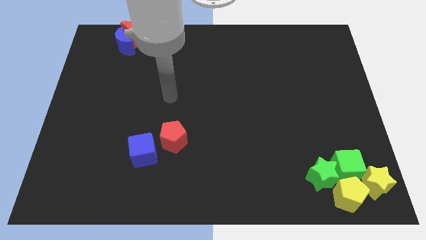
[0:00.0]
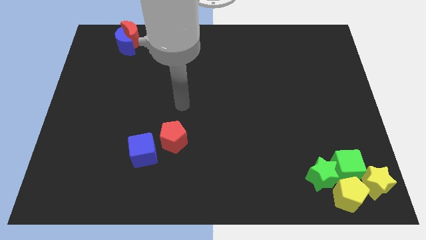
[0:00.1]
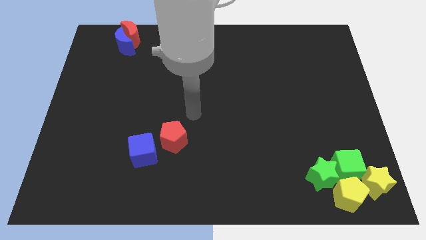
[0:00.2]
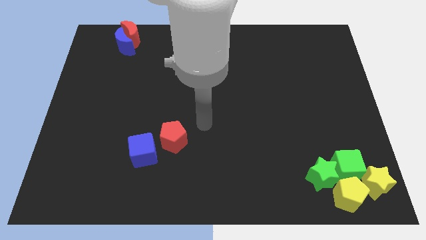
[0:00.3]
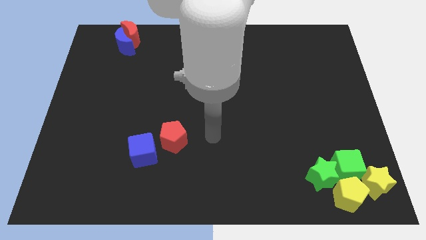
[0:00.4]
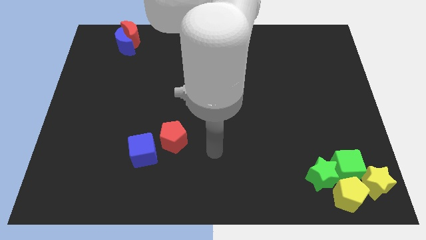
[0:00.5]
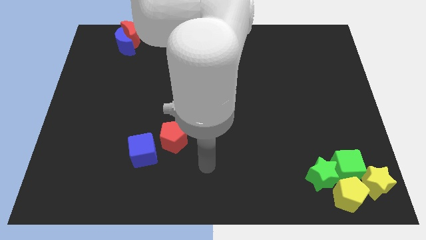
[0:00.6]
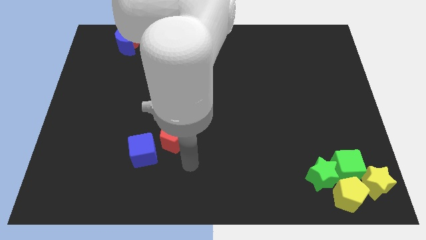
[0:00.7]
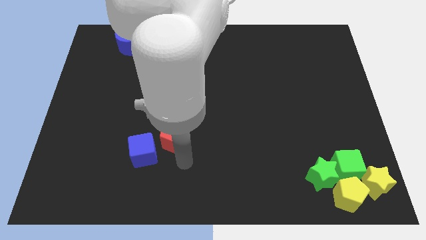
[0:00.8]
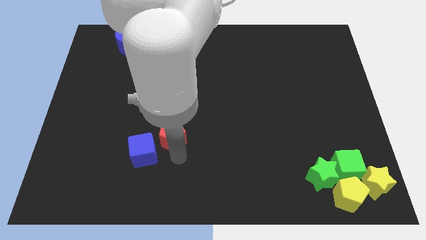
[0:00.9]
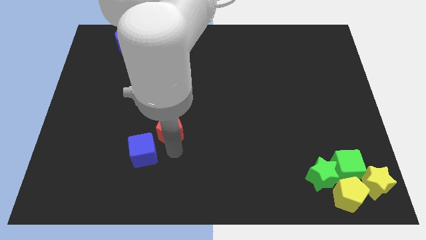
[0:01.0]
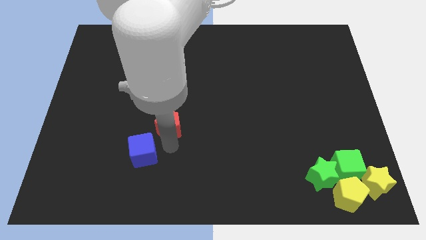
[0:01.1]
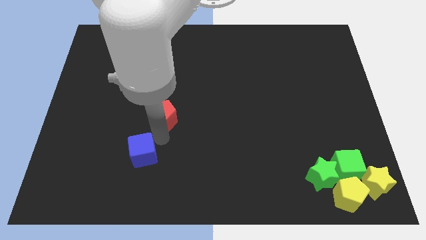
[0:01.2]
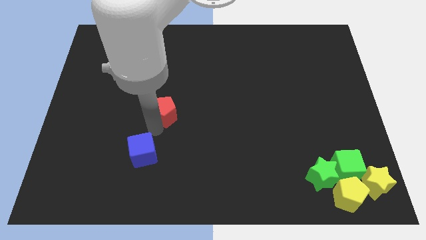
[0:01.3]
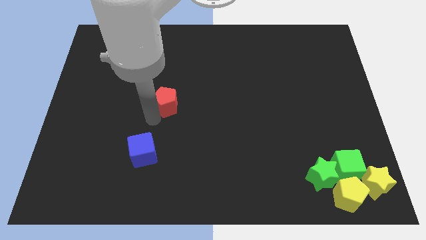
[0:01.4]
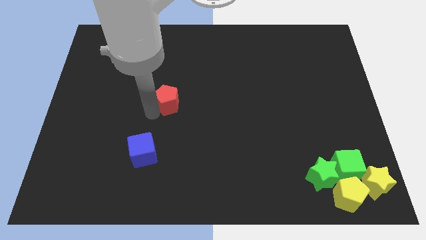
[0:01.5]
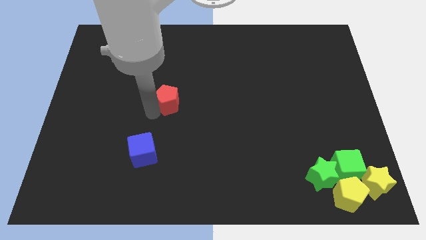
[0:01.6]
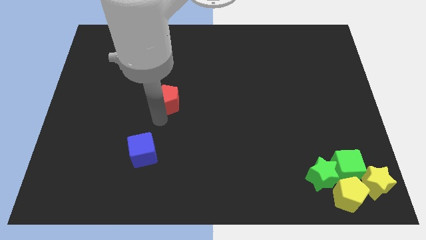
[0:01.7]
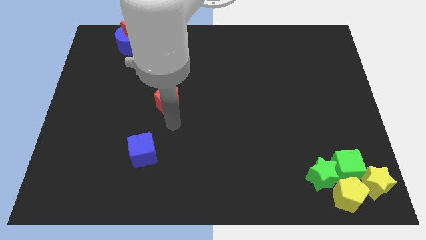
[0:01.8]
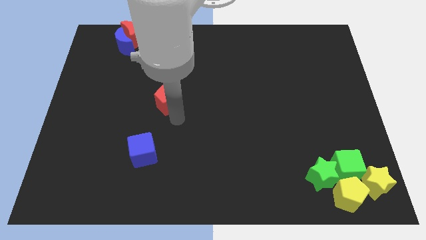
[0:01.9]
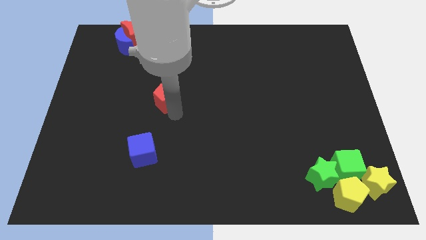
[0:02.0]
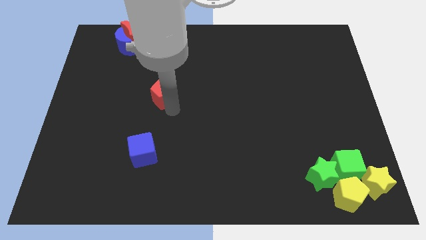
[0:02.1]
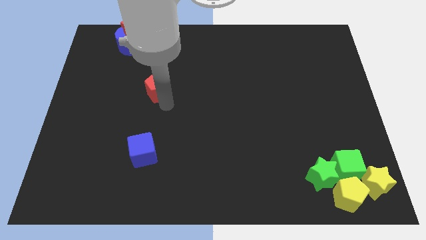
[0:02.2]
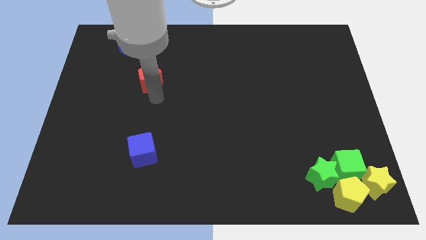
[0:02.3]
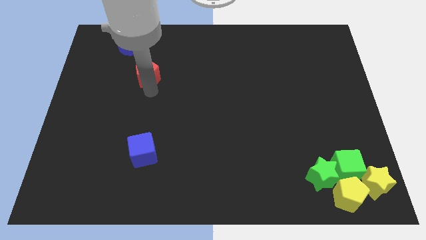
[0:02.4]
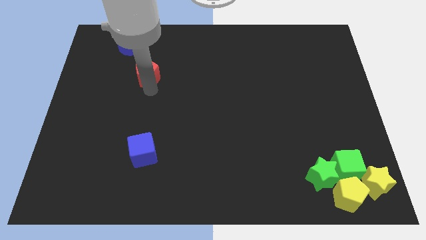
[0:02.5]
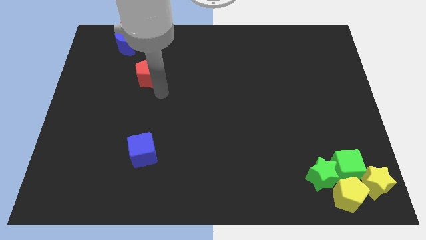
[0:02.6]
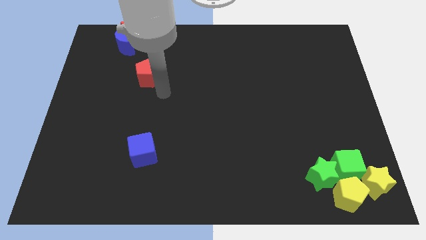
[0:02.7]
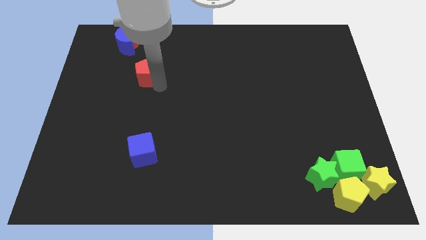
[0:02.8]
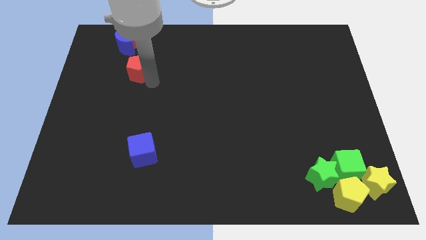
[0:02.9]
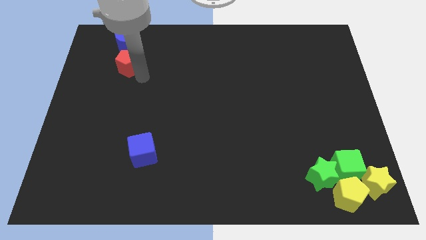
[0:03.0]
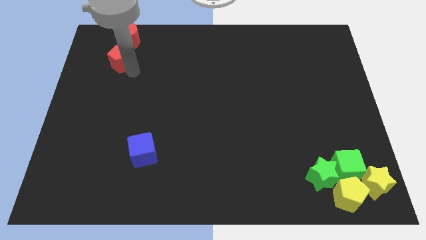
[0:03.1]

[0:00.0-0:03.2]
push red pentagon below blue crescent

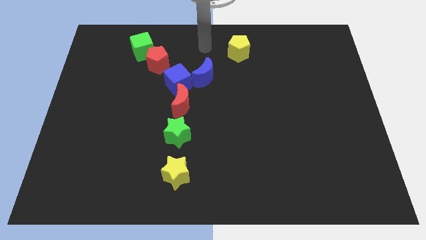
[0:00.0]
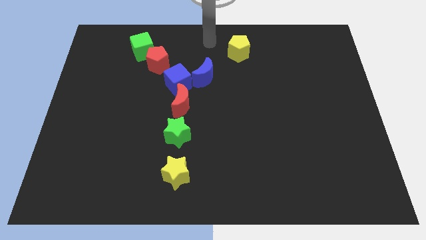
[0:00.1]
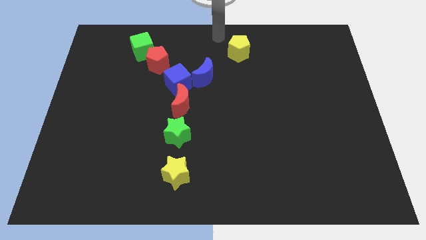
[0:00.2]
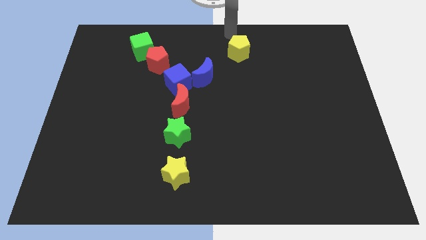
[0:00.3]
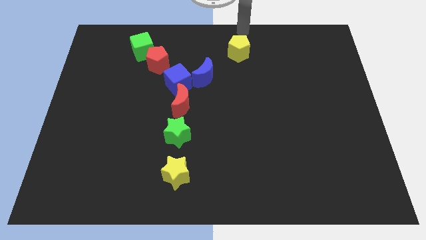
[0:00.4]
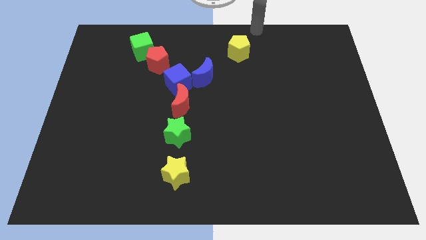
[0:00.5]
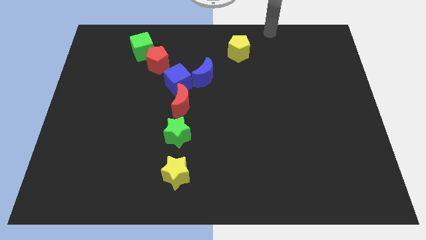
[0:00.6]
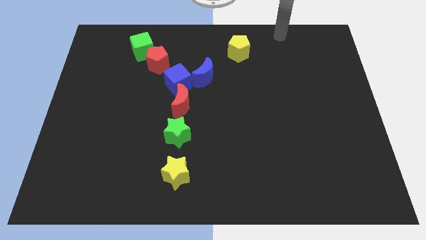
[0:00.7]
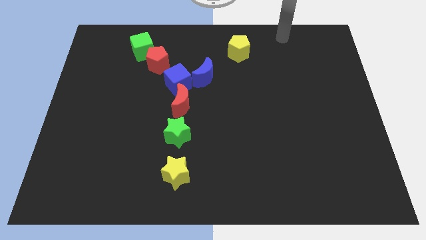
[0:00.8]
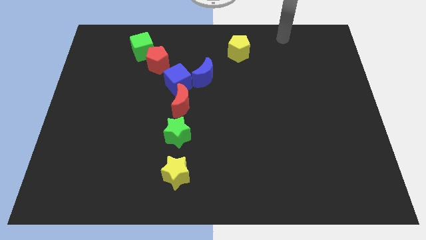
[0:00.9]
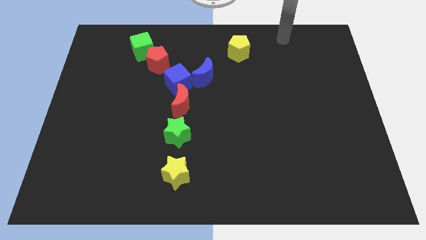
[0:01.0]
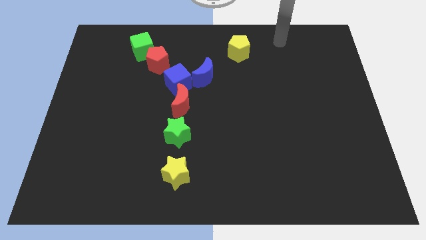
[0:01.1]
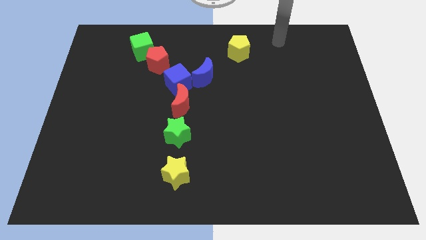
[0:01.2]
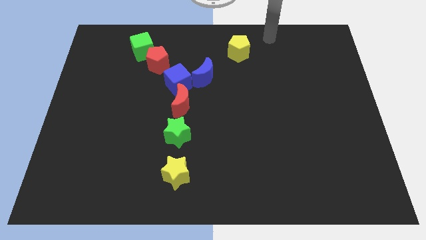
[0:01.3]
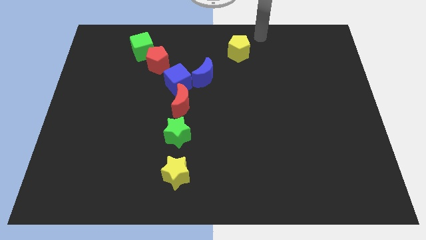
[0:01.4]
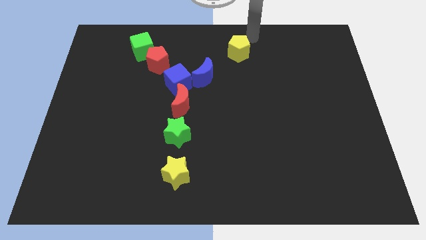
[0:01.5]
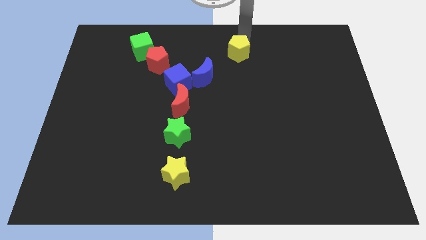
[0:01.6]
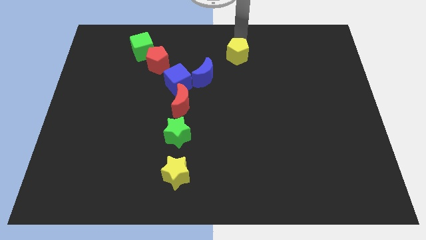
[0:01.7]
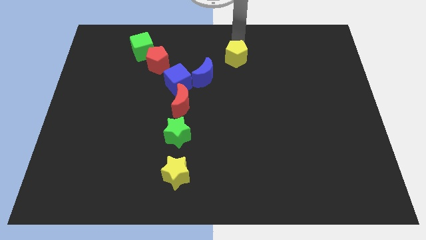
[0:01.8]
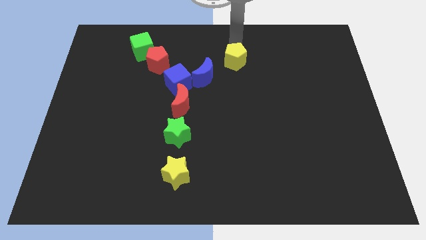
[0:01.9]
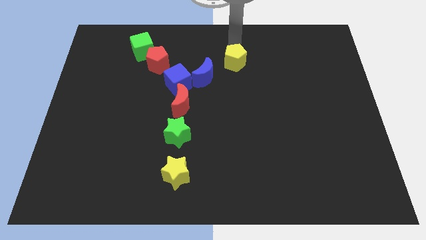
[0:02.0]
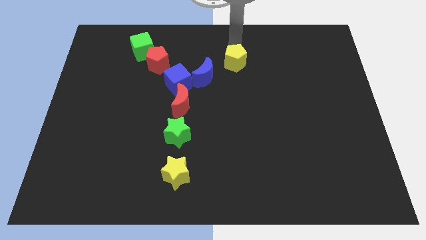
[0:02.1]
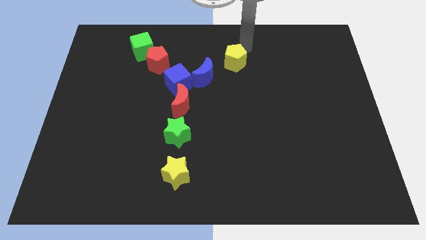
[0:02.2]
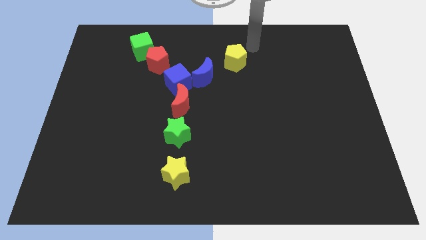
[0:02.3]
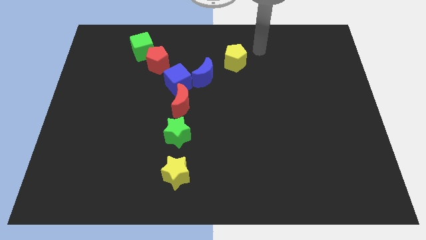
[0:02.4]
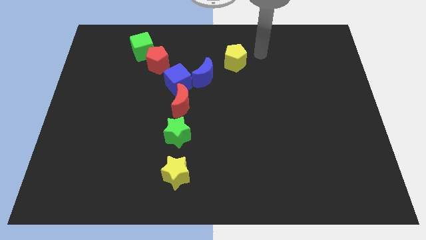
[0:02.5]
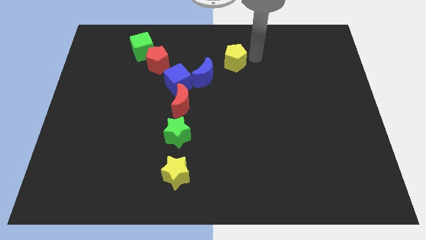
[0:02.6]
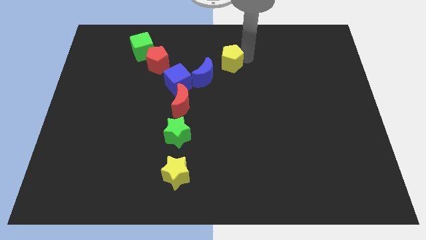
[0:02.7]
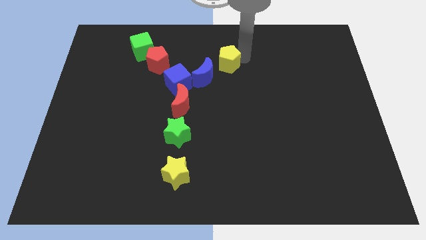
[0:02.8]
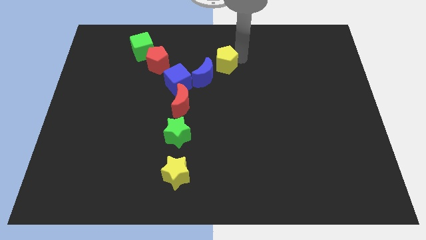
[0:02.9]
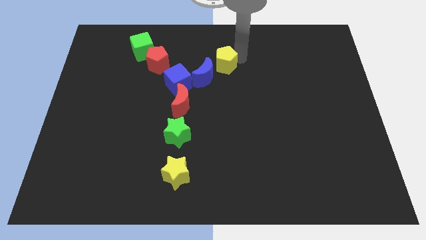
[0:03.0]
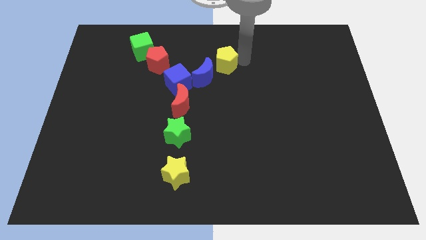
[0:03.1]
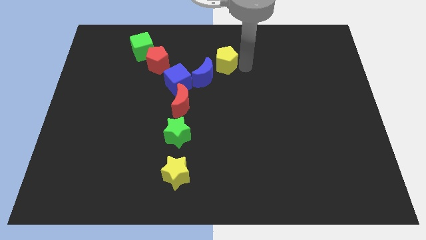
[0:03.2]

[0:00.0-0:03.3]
drag the yellow pentagon towards the blue crescent

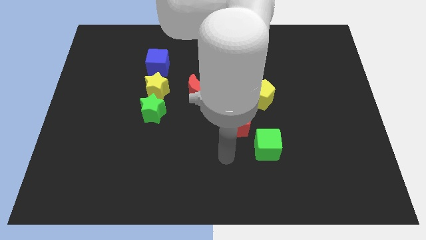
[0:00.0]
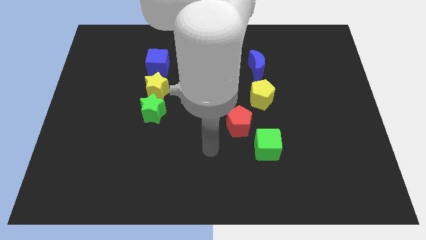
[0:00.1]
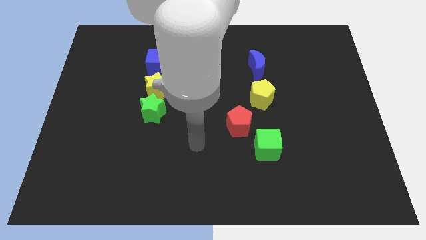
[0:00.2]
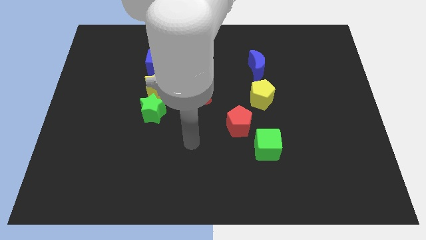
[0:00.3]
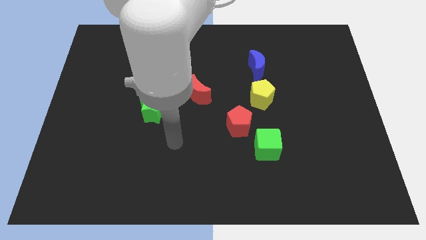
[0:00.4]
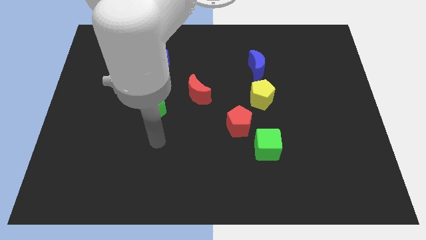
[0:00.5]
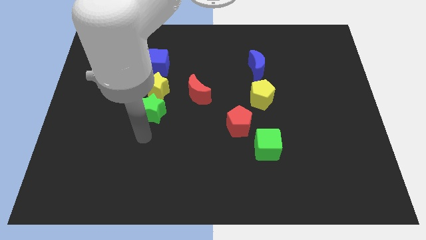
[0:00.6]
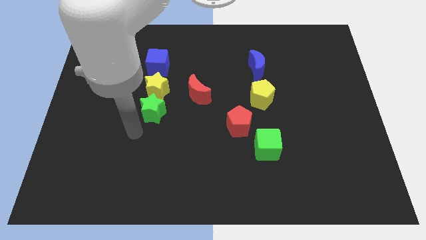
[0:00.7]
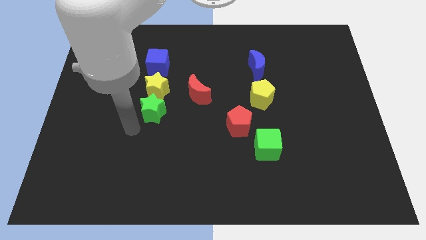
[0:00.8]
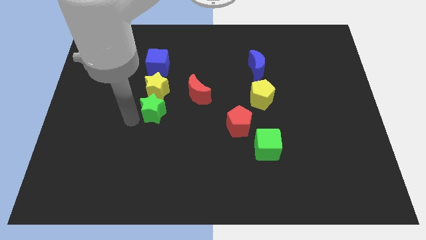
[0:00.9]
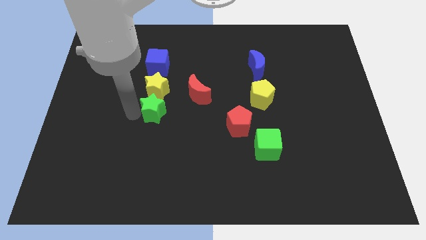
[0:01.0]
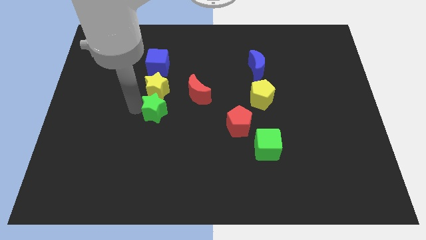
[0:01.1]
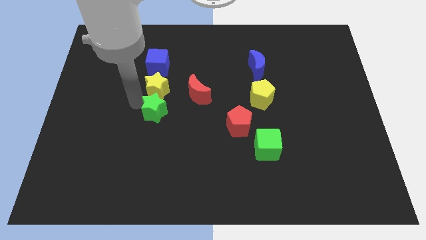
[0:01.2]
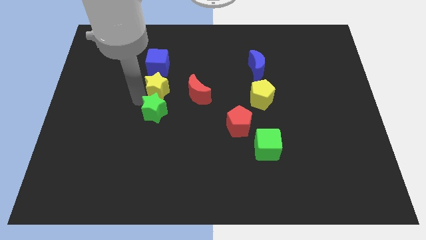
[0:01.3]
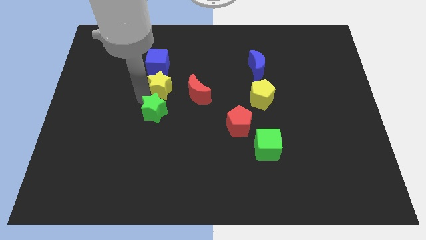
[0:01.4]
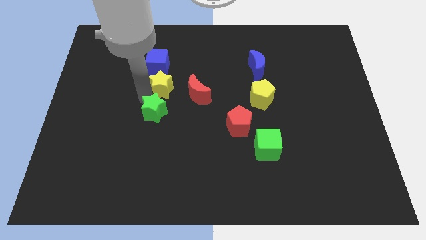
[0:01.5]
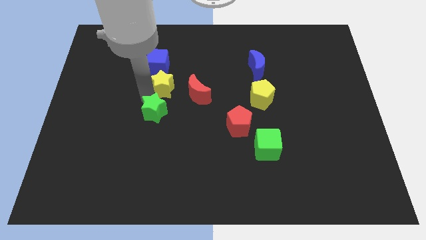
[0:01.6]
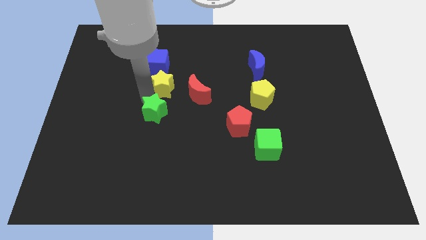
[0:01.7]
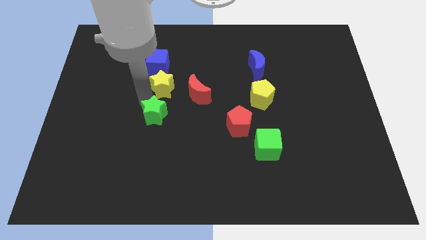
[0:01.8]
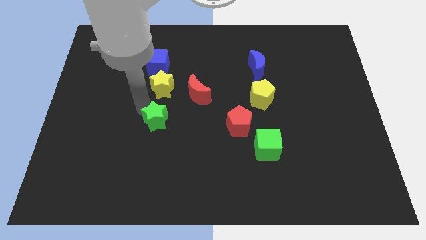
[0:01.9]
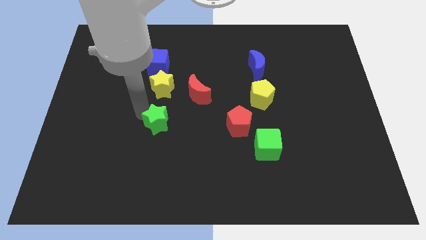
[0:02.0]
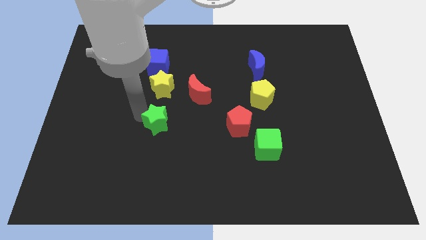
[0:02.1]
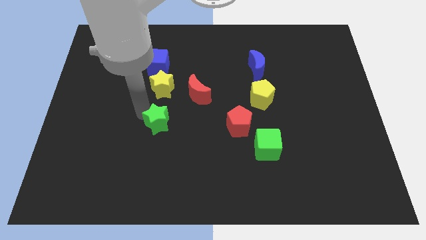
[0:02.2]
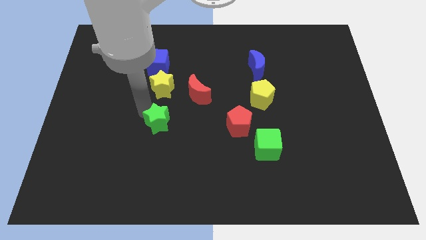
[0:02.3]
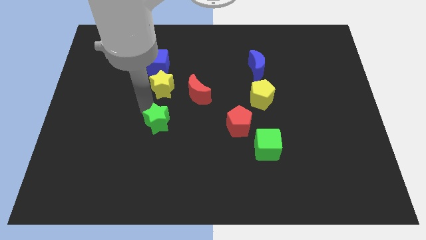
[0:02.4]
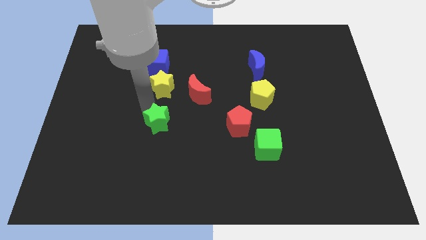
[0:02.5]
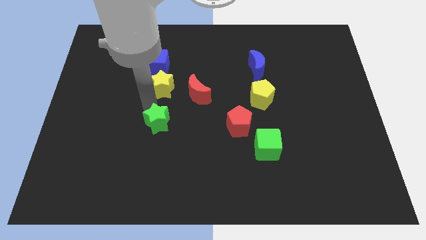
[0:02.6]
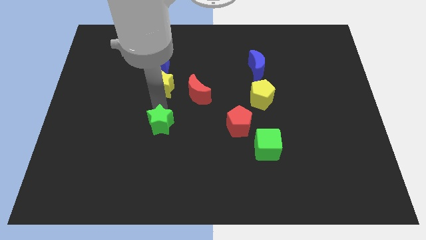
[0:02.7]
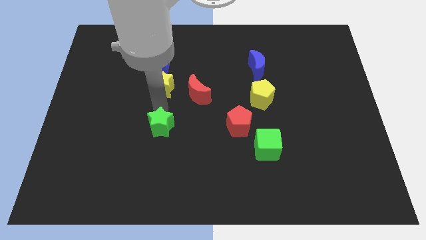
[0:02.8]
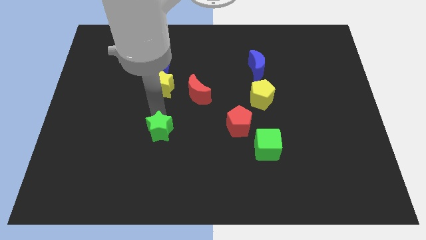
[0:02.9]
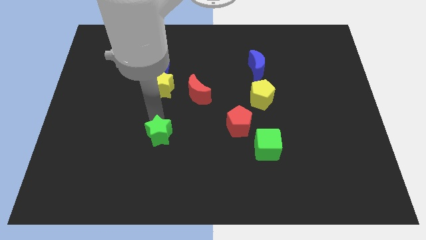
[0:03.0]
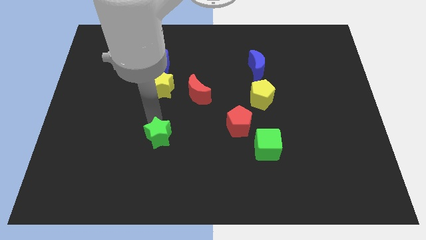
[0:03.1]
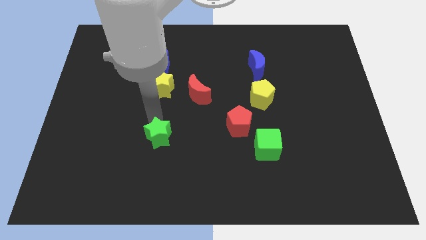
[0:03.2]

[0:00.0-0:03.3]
slide the green star to the left of the red pentagon
